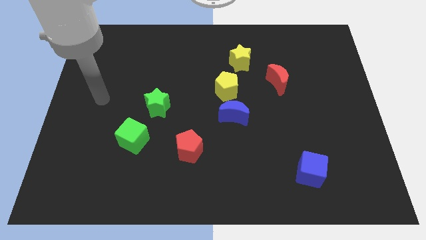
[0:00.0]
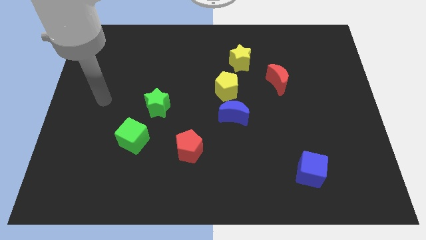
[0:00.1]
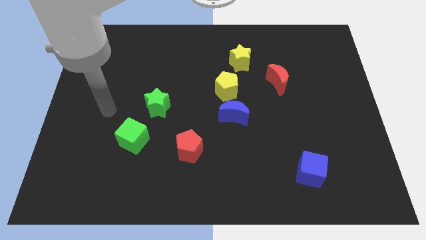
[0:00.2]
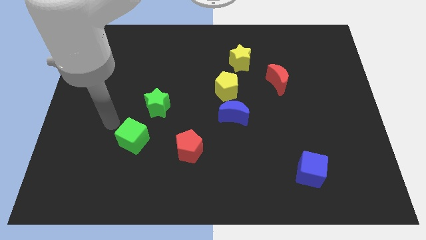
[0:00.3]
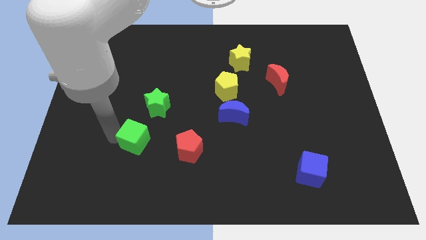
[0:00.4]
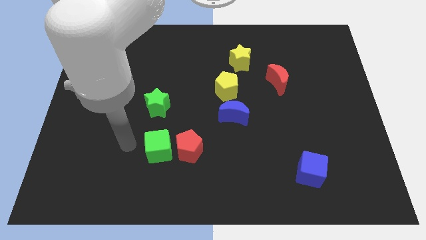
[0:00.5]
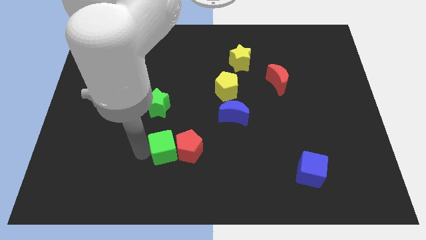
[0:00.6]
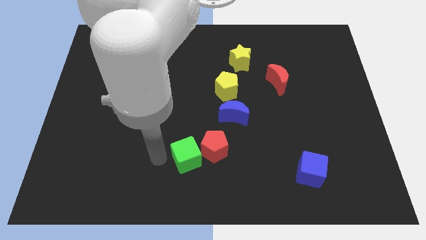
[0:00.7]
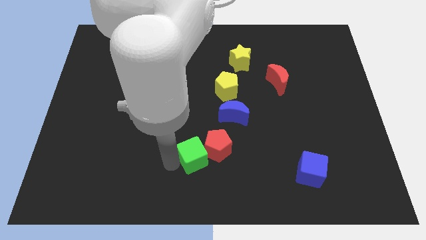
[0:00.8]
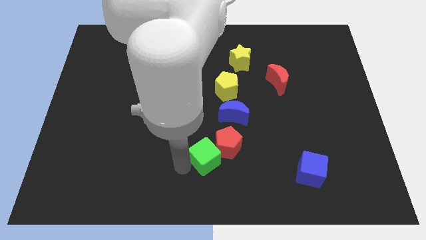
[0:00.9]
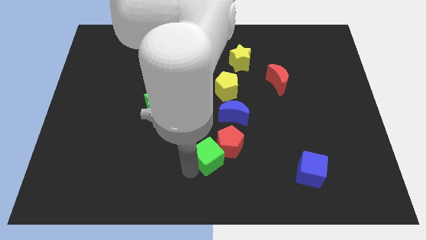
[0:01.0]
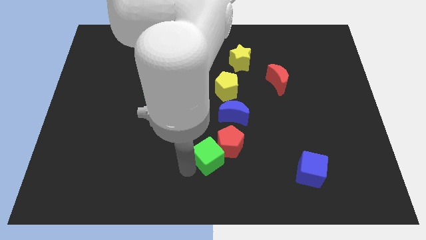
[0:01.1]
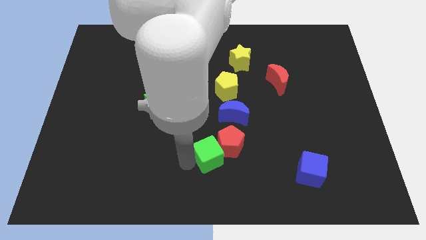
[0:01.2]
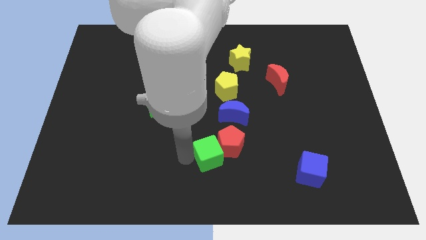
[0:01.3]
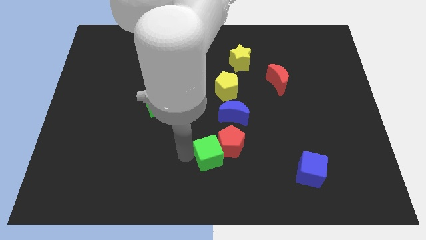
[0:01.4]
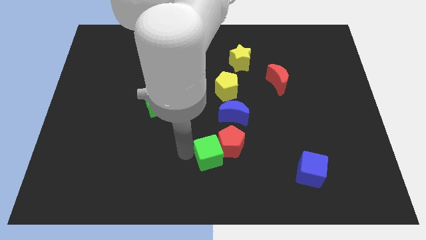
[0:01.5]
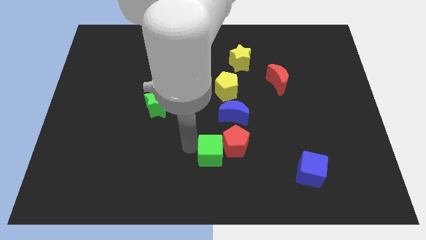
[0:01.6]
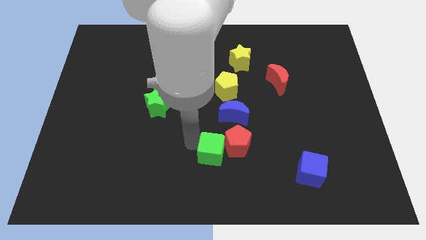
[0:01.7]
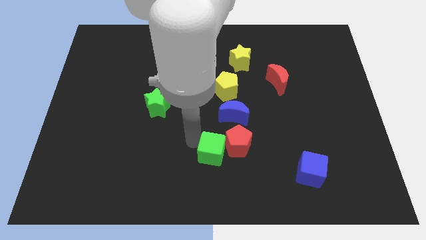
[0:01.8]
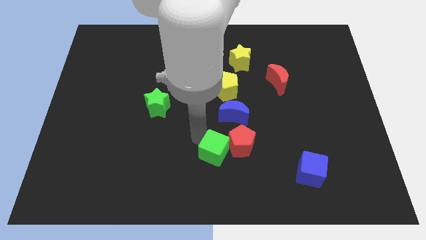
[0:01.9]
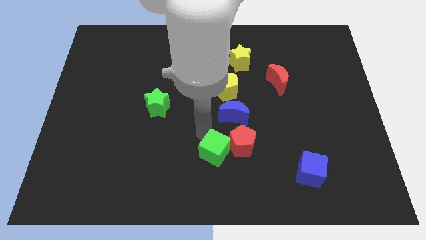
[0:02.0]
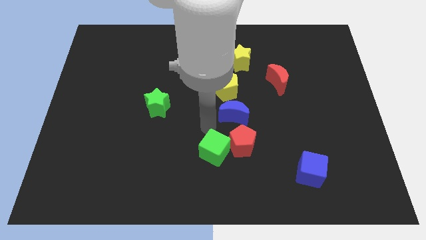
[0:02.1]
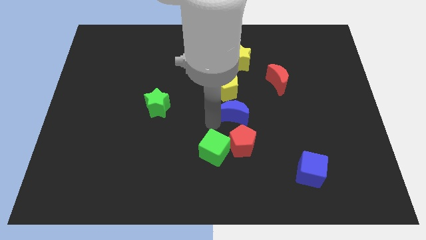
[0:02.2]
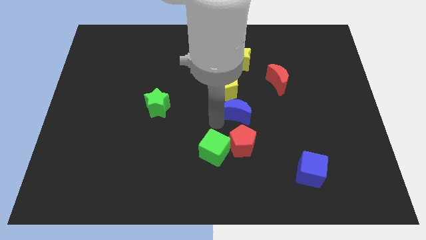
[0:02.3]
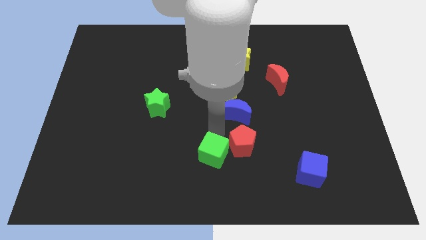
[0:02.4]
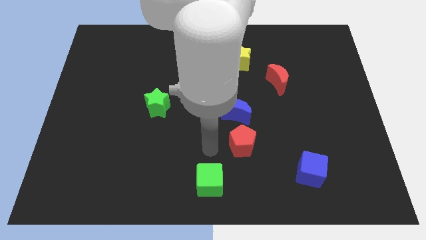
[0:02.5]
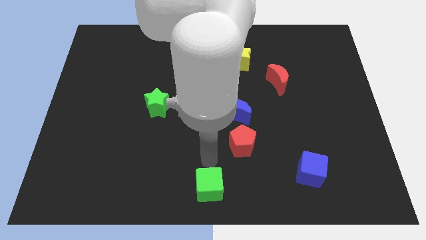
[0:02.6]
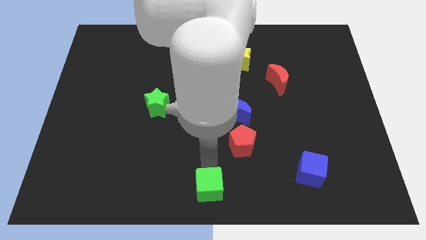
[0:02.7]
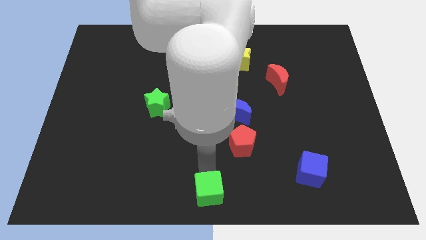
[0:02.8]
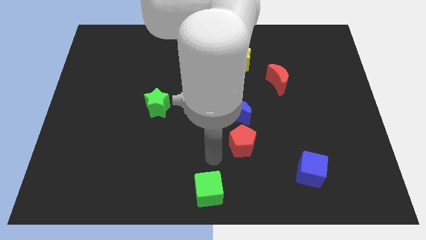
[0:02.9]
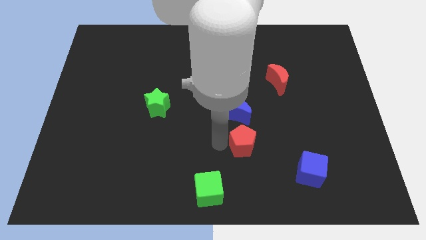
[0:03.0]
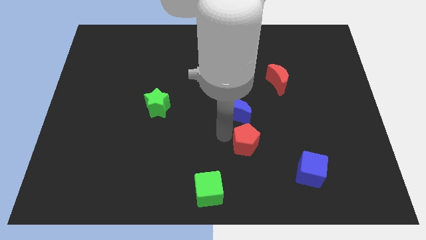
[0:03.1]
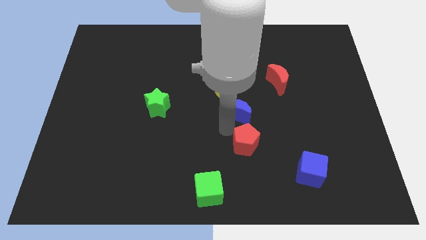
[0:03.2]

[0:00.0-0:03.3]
move the green cube towards the bottom center of the board

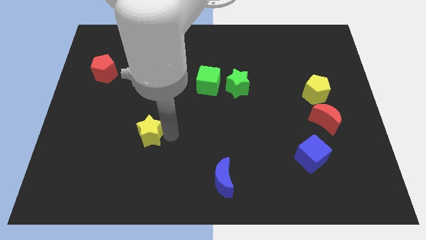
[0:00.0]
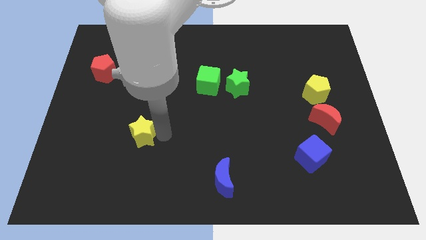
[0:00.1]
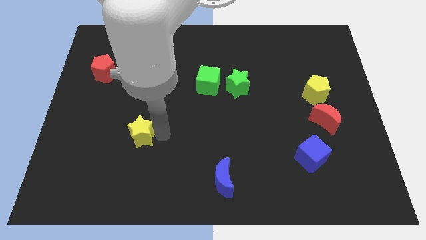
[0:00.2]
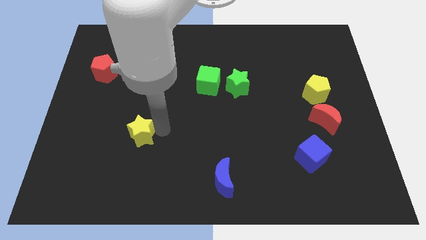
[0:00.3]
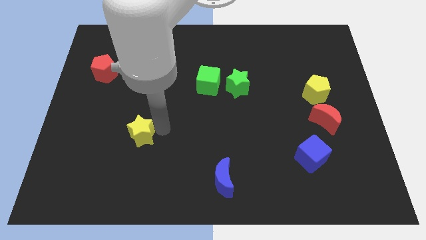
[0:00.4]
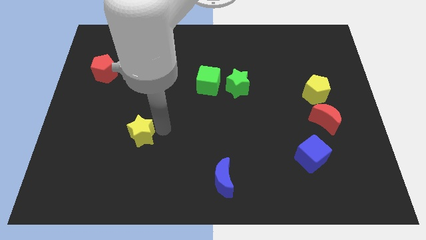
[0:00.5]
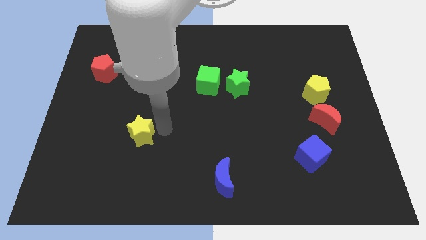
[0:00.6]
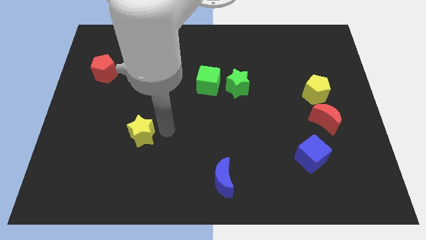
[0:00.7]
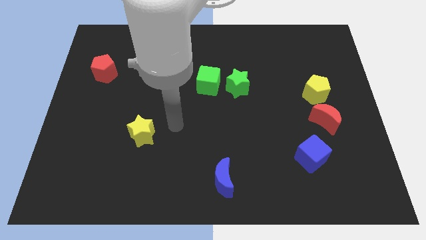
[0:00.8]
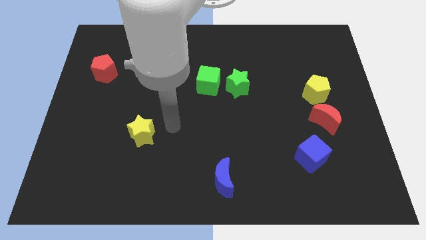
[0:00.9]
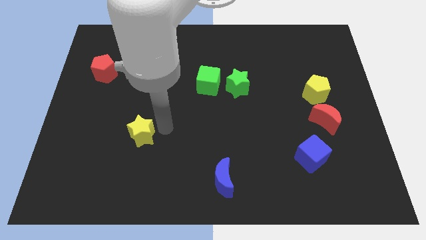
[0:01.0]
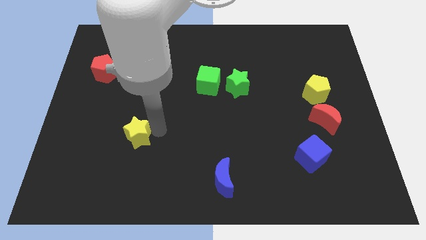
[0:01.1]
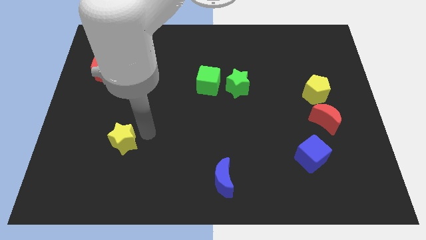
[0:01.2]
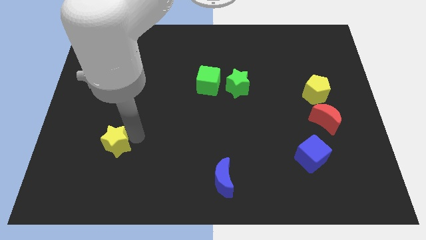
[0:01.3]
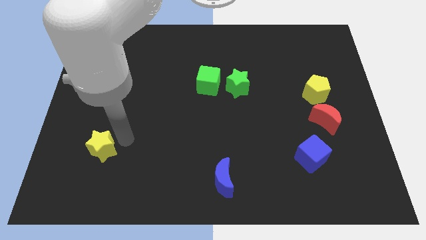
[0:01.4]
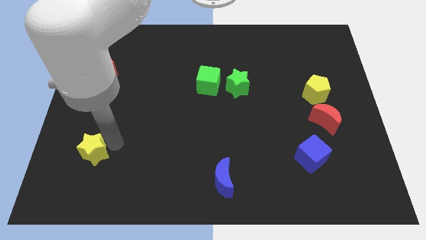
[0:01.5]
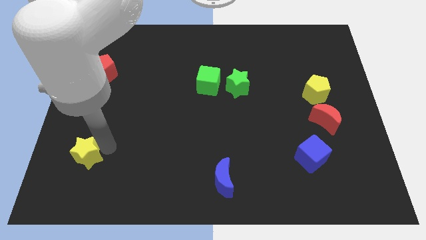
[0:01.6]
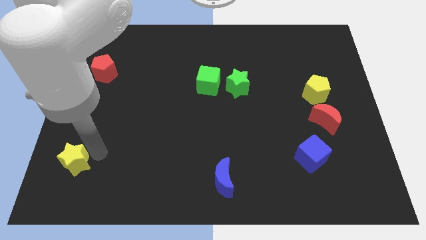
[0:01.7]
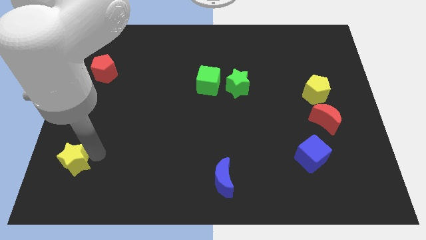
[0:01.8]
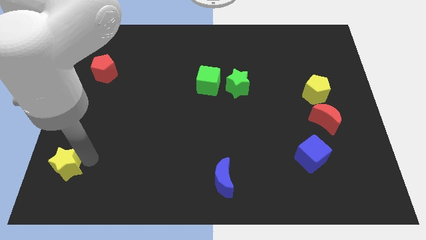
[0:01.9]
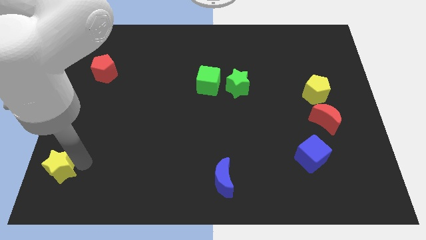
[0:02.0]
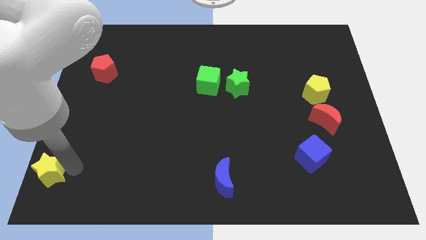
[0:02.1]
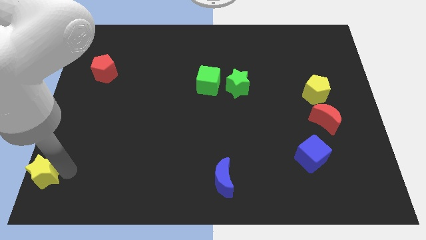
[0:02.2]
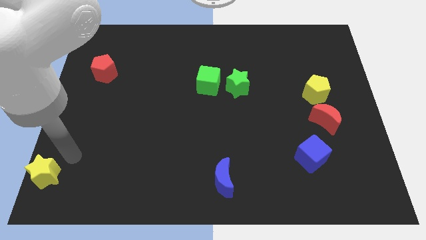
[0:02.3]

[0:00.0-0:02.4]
move the yellow star to the bottom left of the red pentagon

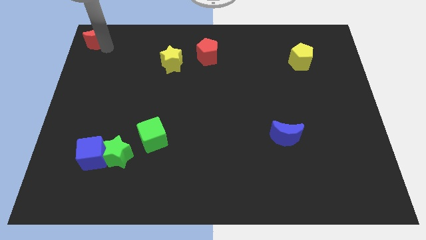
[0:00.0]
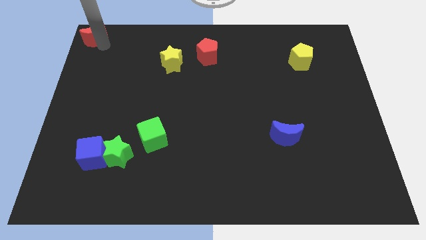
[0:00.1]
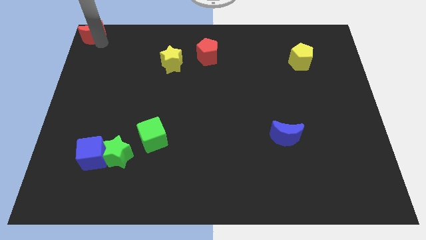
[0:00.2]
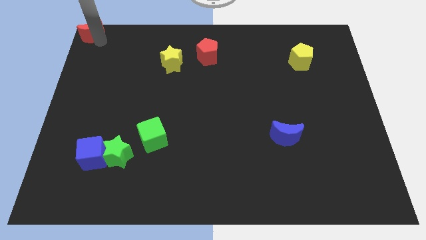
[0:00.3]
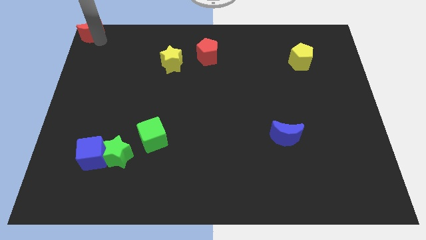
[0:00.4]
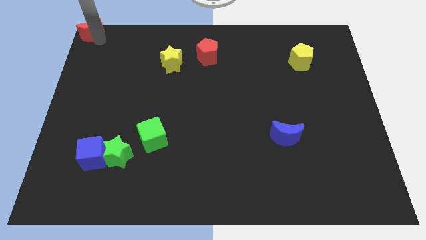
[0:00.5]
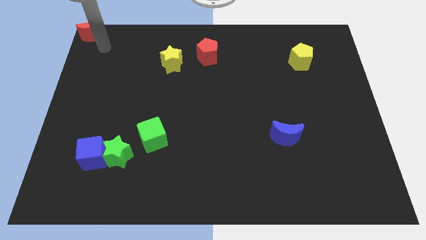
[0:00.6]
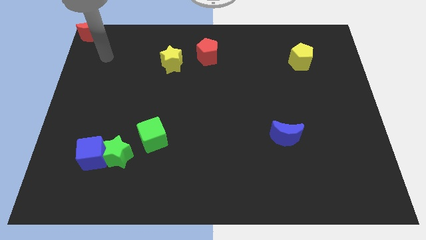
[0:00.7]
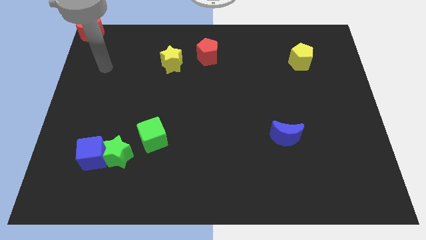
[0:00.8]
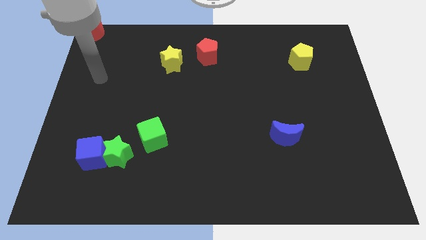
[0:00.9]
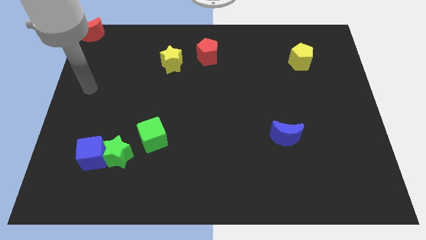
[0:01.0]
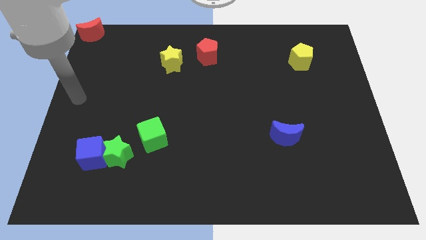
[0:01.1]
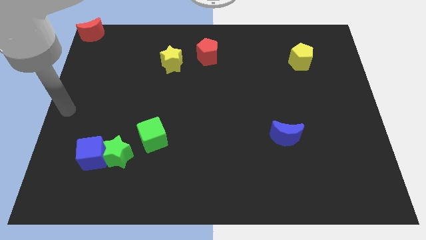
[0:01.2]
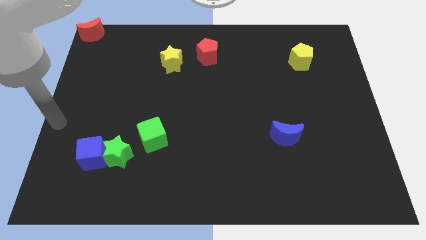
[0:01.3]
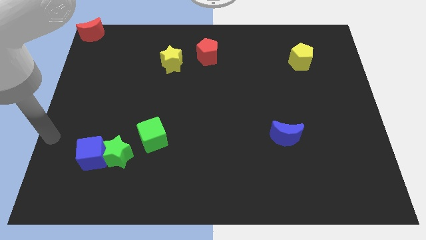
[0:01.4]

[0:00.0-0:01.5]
move the red moon to the top left corner

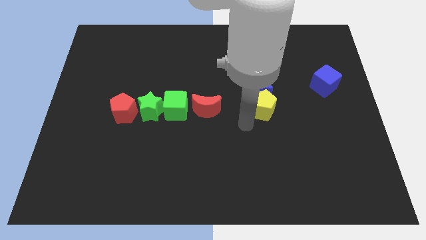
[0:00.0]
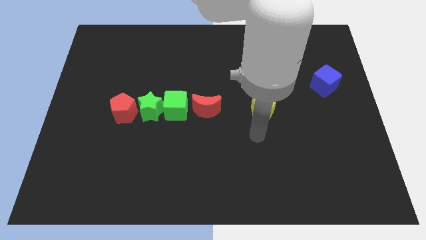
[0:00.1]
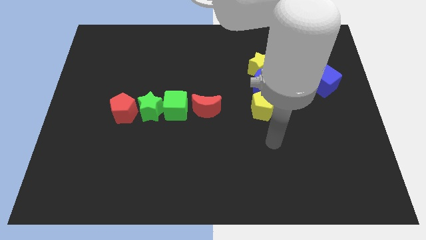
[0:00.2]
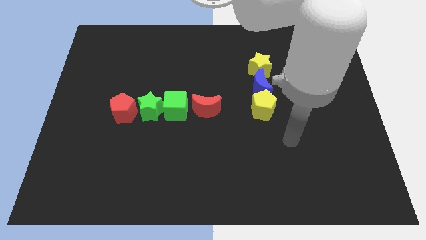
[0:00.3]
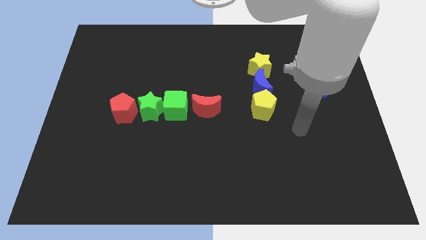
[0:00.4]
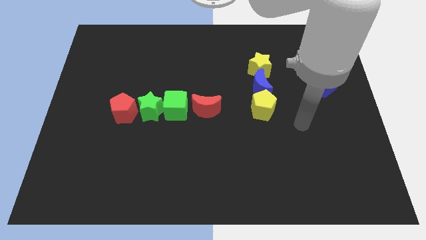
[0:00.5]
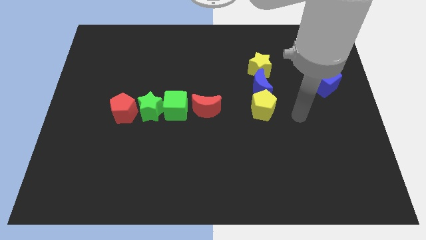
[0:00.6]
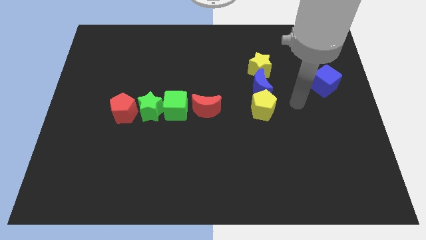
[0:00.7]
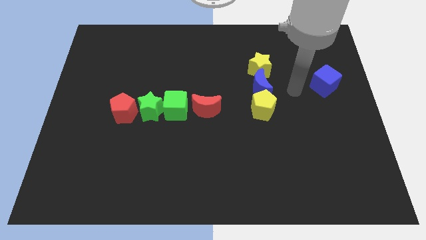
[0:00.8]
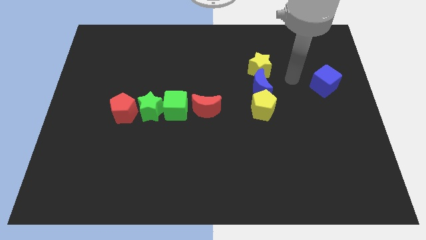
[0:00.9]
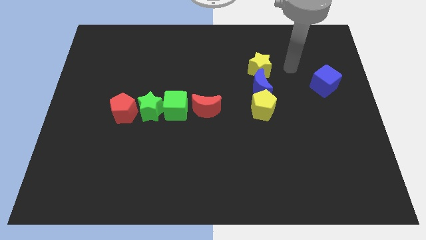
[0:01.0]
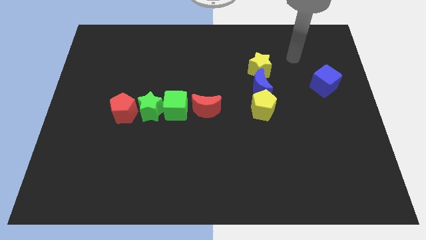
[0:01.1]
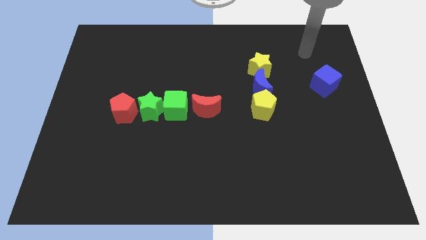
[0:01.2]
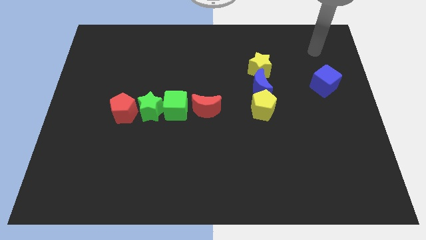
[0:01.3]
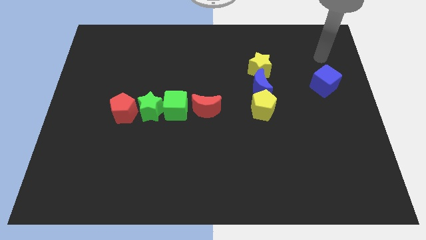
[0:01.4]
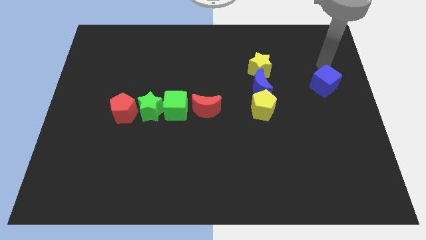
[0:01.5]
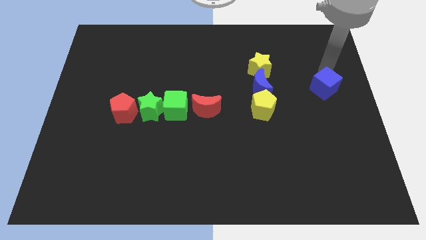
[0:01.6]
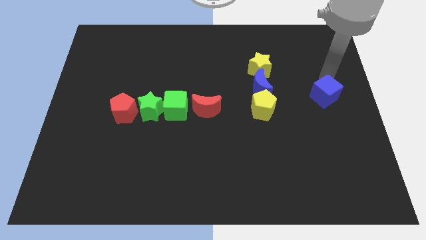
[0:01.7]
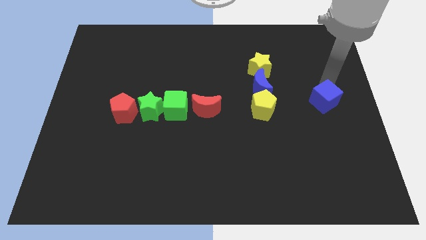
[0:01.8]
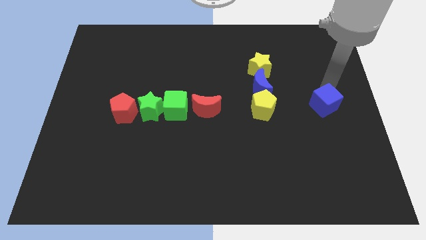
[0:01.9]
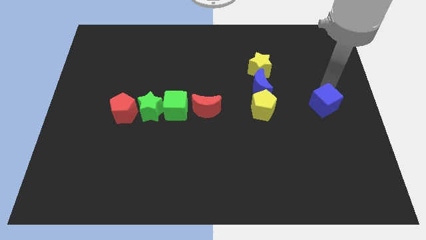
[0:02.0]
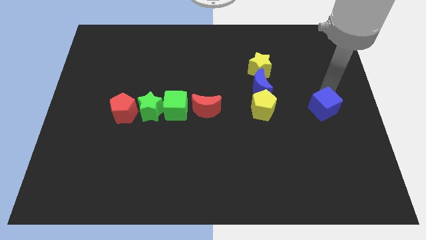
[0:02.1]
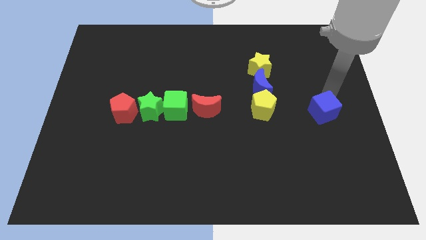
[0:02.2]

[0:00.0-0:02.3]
move the blue cube parallel to the yellow pentagon
